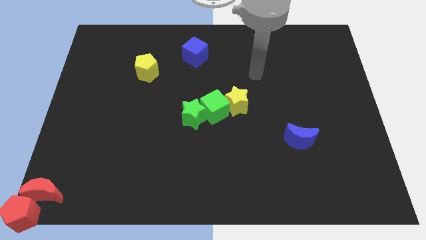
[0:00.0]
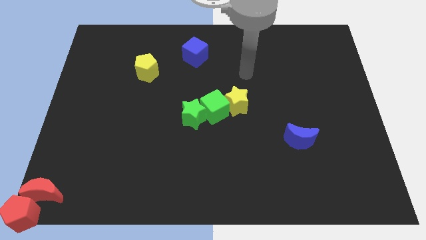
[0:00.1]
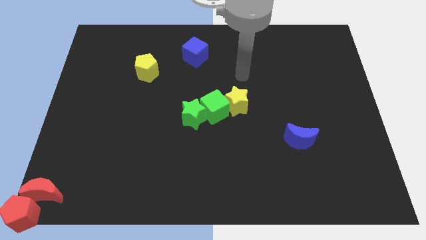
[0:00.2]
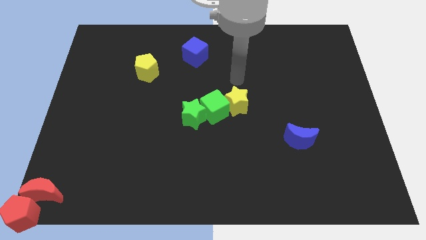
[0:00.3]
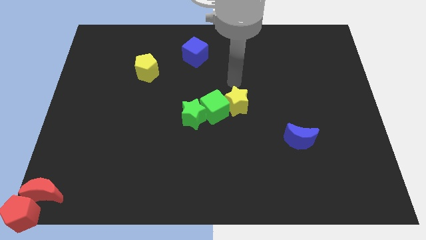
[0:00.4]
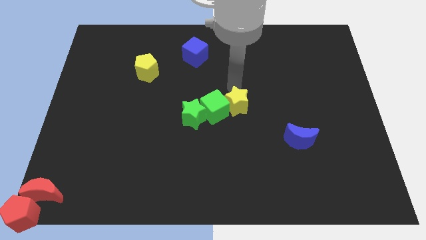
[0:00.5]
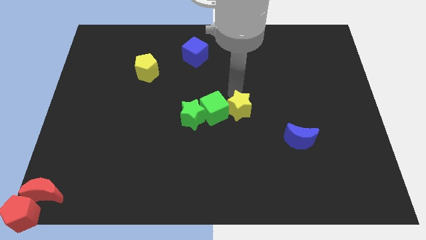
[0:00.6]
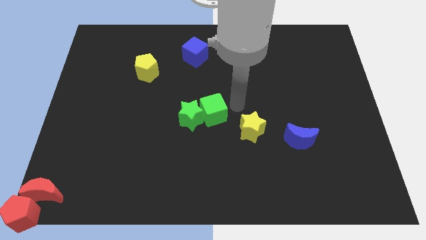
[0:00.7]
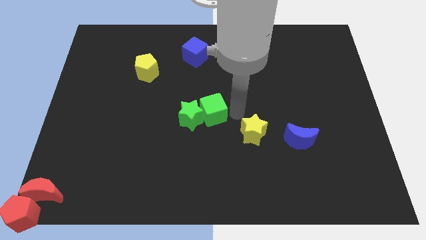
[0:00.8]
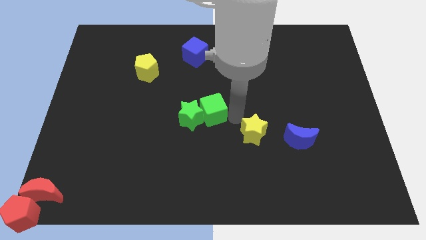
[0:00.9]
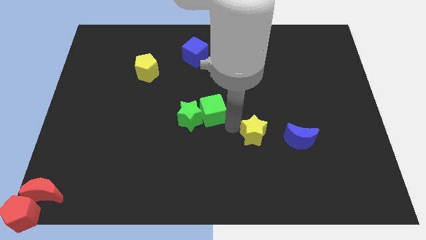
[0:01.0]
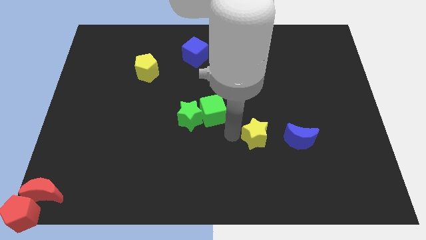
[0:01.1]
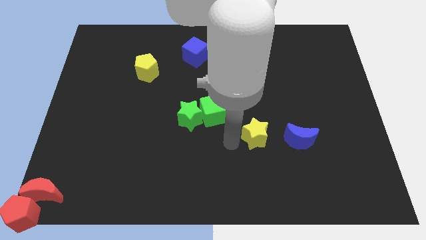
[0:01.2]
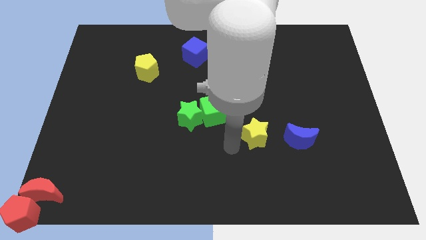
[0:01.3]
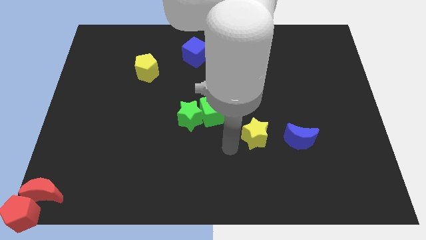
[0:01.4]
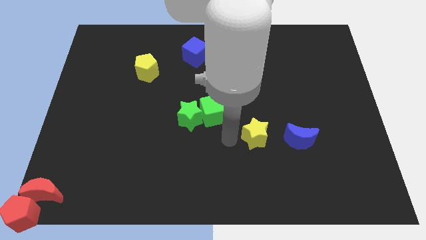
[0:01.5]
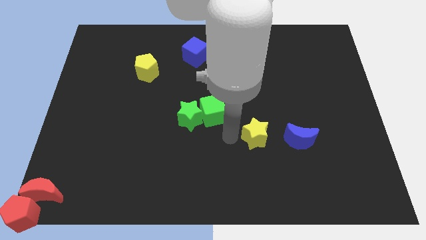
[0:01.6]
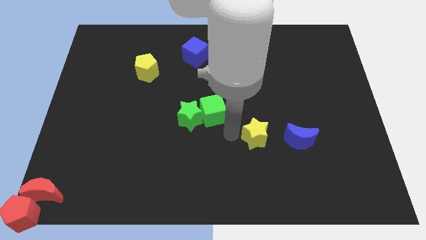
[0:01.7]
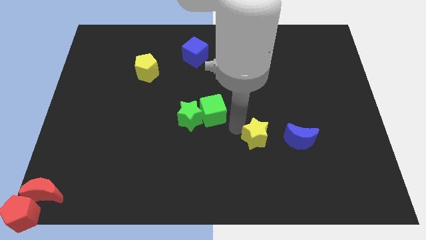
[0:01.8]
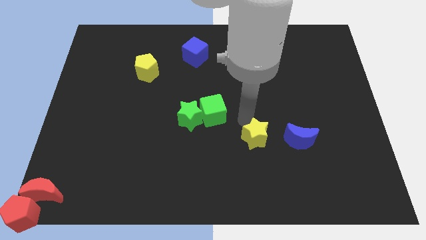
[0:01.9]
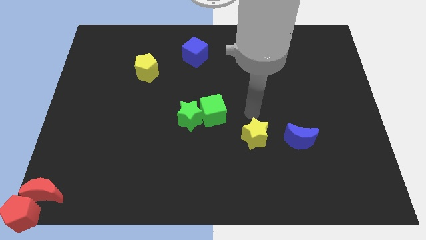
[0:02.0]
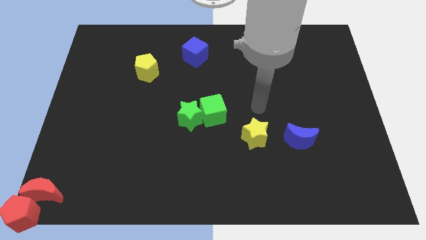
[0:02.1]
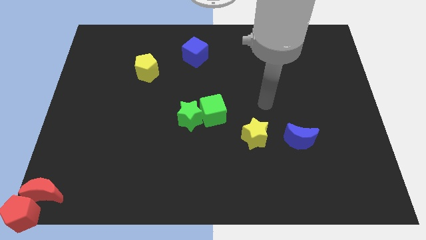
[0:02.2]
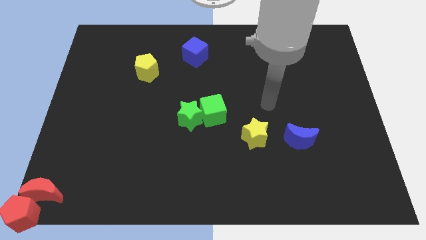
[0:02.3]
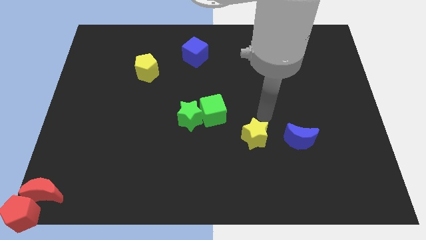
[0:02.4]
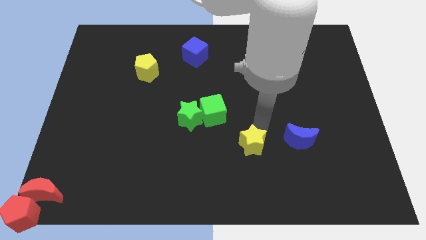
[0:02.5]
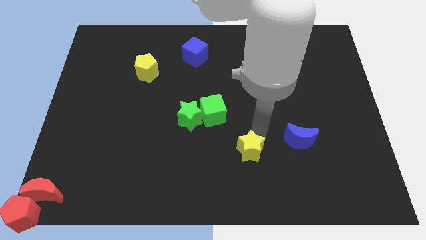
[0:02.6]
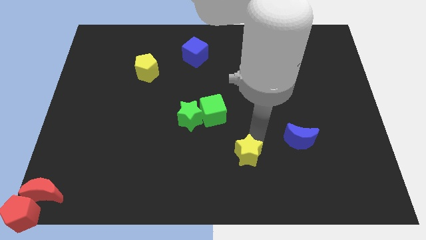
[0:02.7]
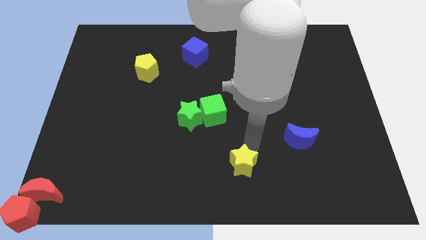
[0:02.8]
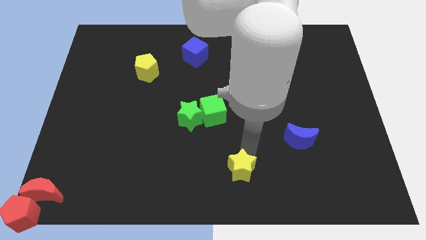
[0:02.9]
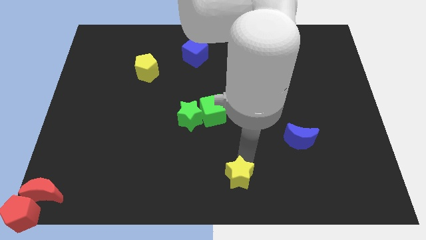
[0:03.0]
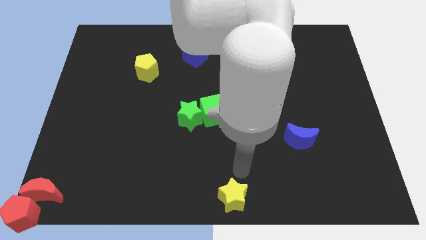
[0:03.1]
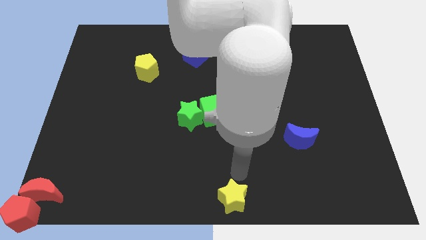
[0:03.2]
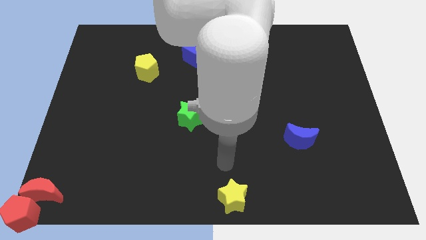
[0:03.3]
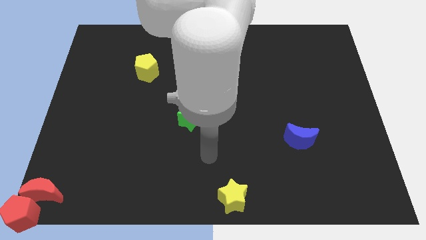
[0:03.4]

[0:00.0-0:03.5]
move the yellow star to the bottom center

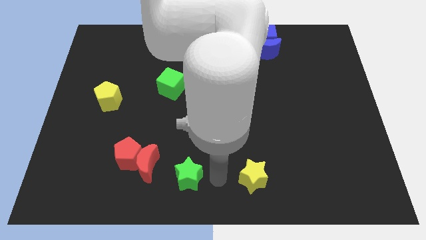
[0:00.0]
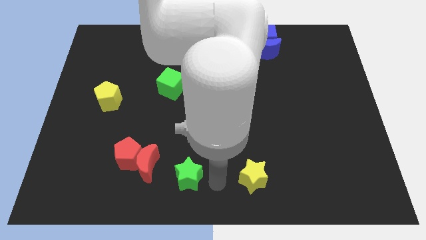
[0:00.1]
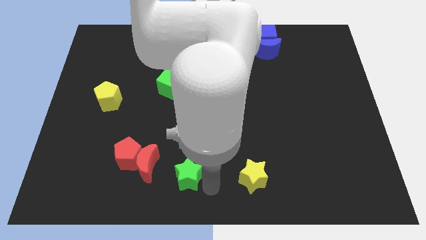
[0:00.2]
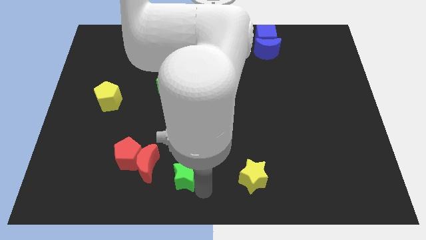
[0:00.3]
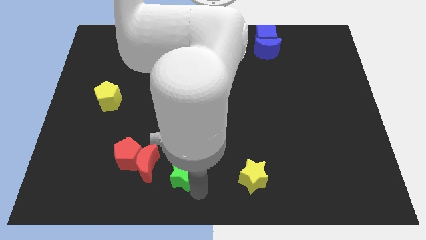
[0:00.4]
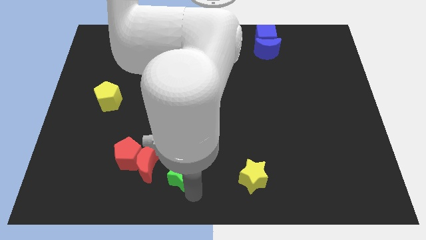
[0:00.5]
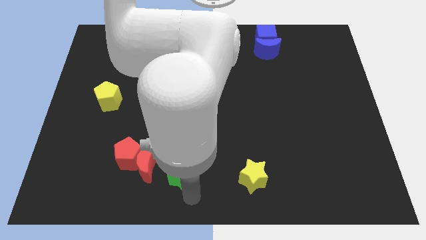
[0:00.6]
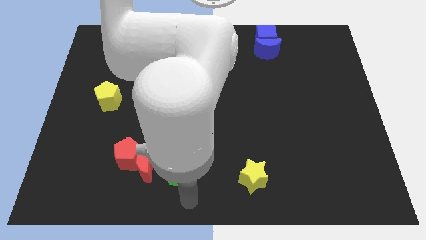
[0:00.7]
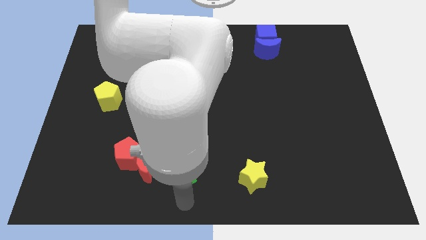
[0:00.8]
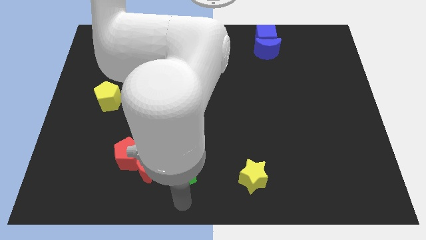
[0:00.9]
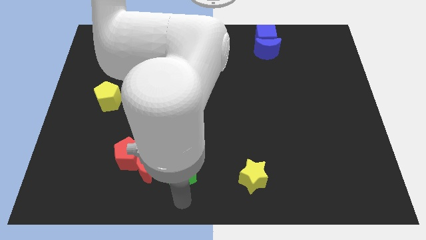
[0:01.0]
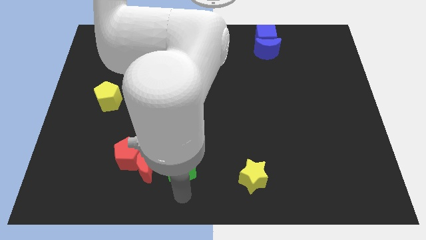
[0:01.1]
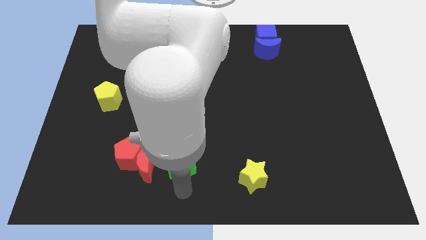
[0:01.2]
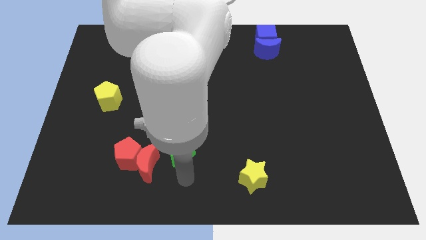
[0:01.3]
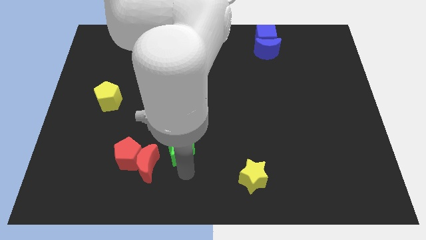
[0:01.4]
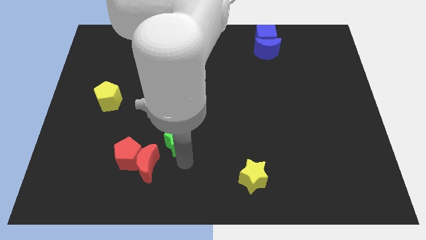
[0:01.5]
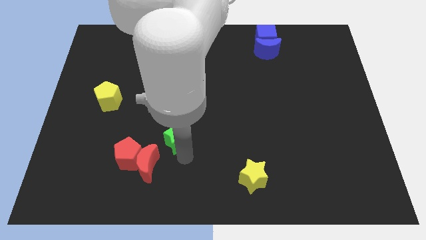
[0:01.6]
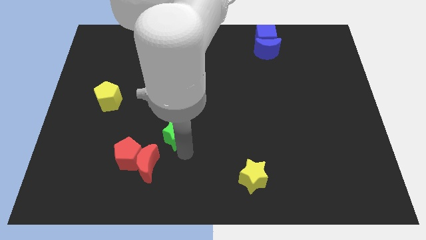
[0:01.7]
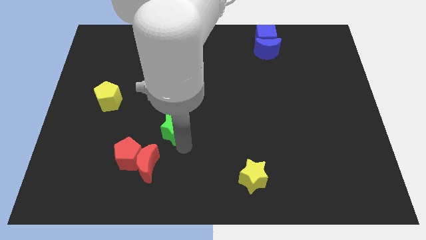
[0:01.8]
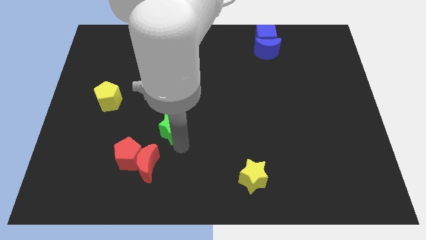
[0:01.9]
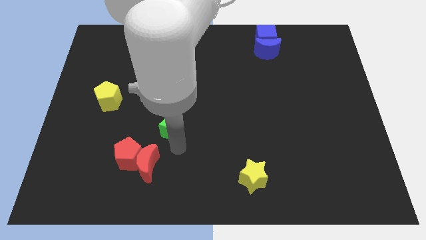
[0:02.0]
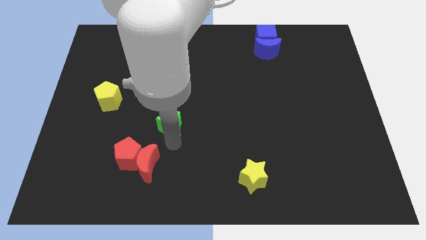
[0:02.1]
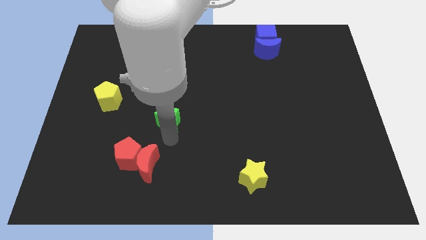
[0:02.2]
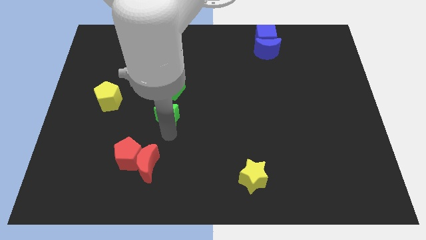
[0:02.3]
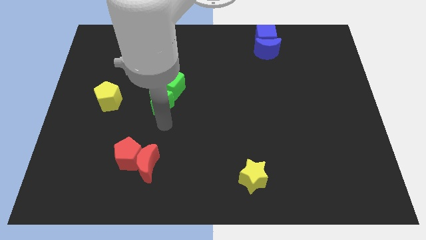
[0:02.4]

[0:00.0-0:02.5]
place the green star at the bottom of green cube

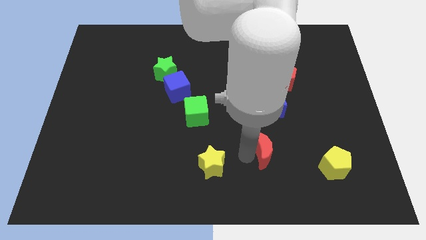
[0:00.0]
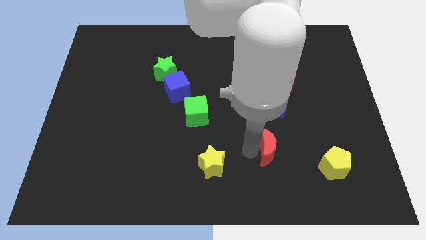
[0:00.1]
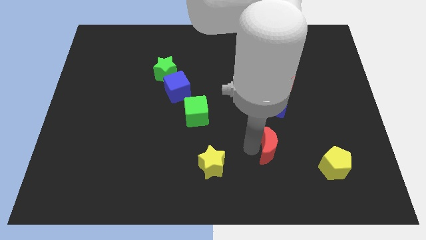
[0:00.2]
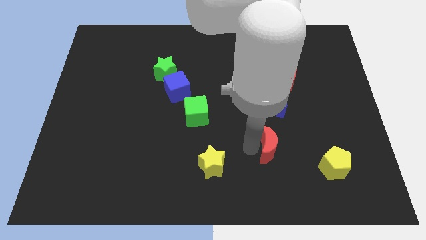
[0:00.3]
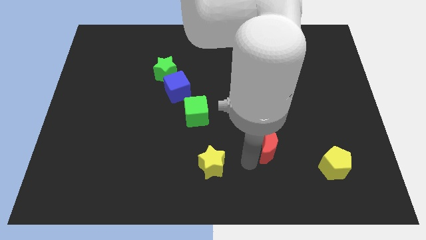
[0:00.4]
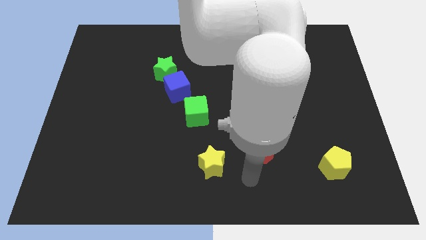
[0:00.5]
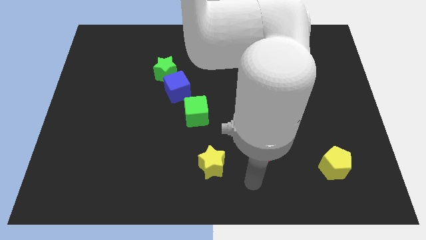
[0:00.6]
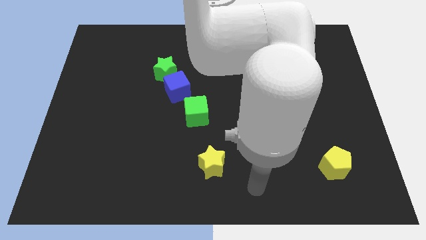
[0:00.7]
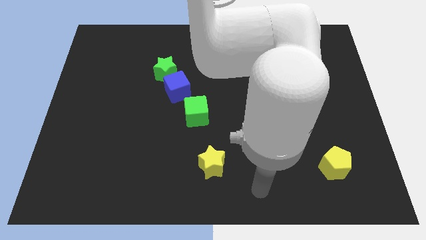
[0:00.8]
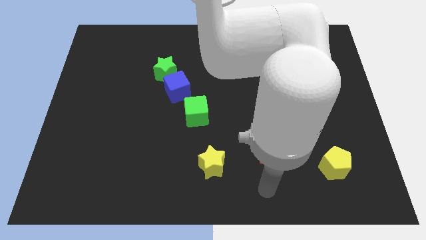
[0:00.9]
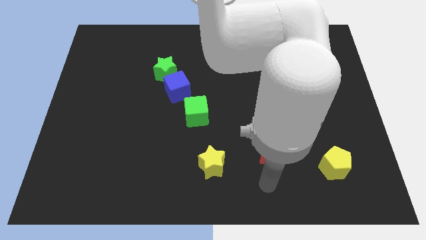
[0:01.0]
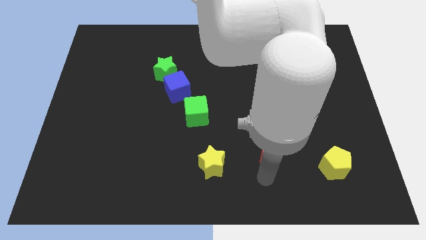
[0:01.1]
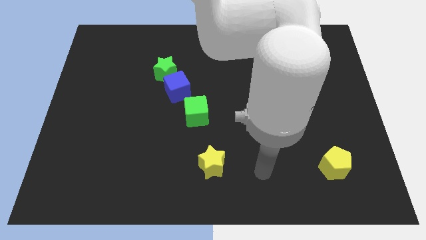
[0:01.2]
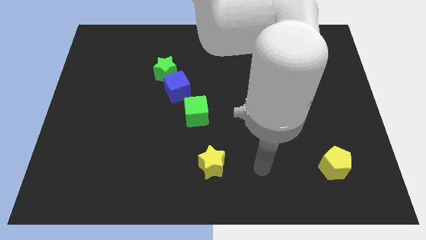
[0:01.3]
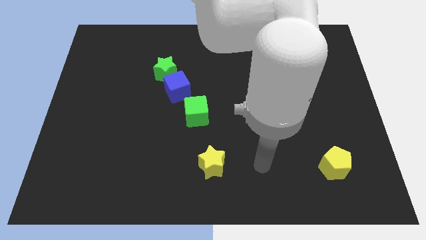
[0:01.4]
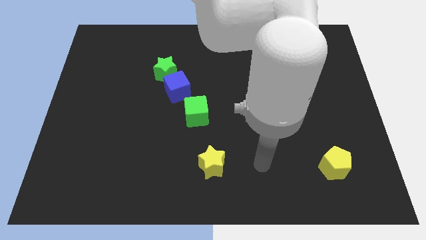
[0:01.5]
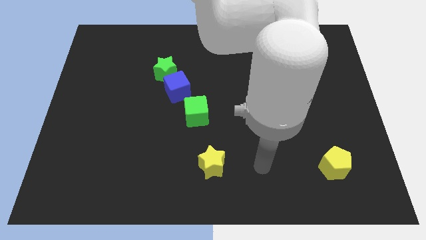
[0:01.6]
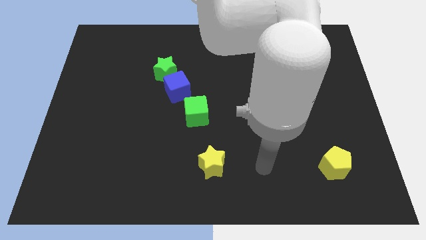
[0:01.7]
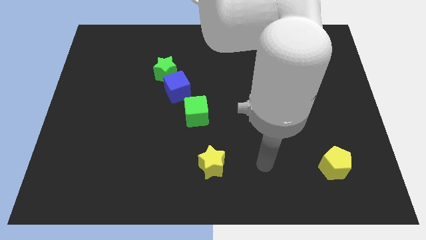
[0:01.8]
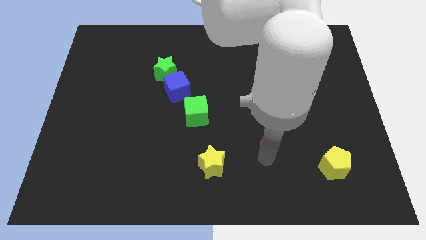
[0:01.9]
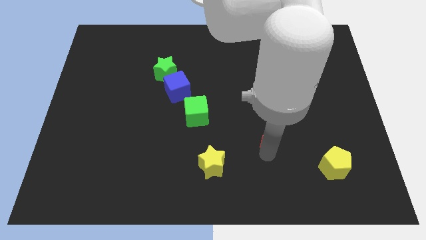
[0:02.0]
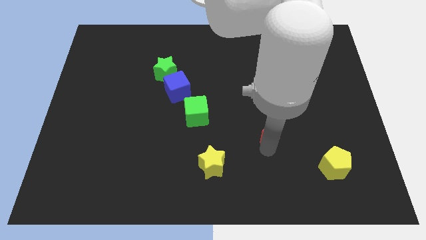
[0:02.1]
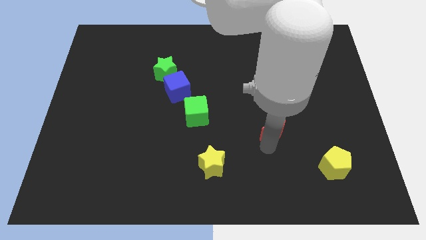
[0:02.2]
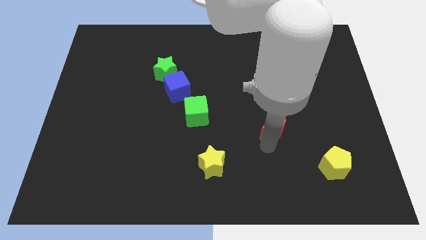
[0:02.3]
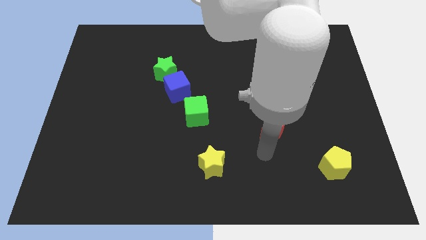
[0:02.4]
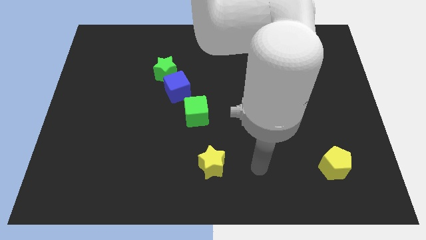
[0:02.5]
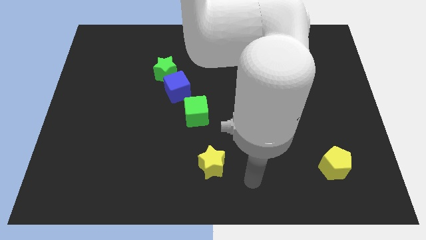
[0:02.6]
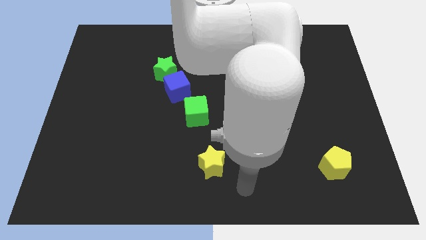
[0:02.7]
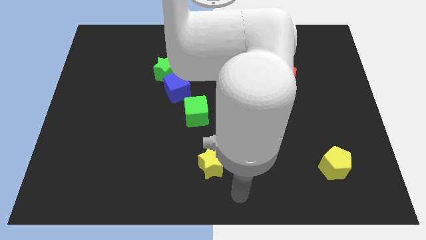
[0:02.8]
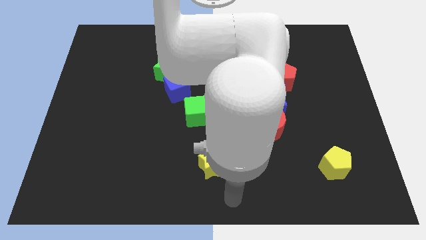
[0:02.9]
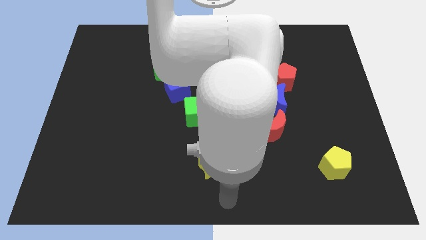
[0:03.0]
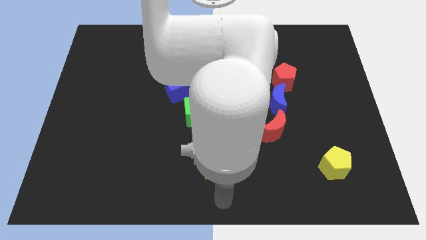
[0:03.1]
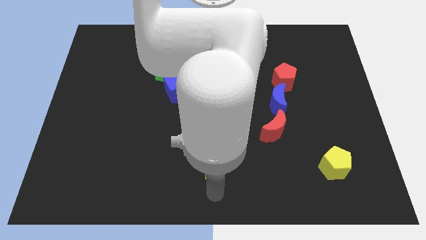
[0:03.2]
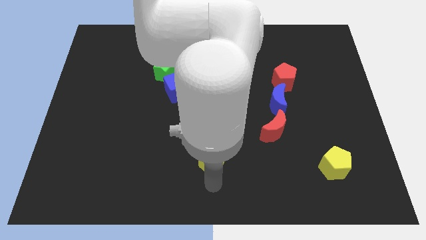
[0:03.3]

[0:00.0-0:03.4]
move red moon into the blue moon
